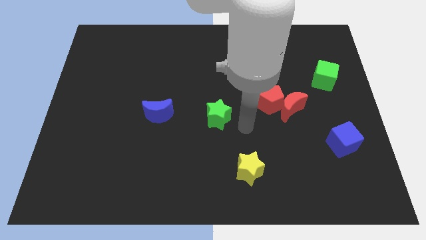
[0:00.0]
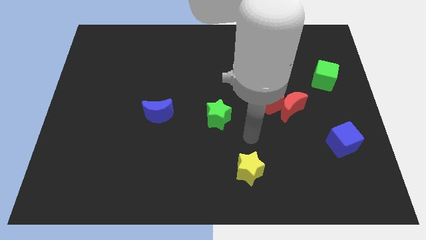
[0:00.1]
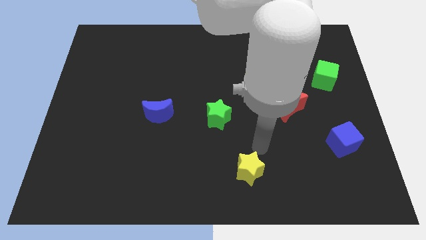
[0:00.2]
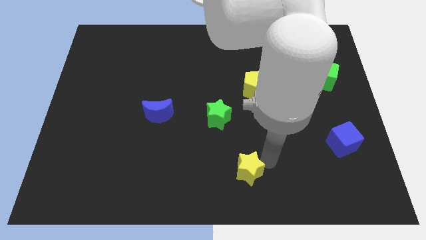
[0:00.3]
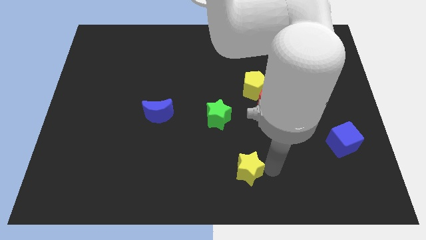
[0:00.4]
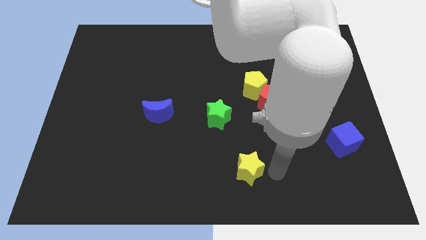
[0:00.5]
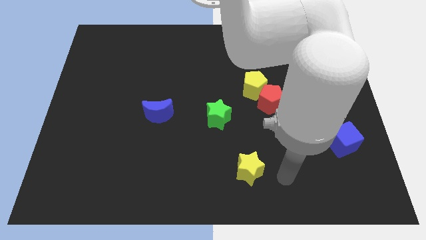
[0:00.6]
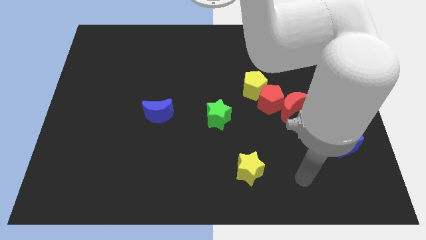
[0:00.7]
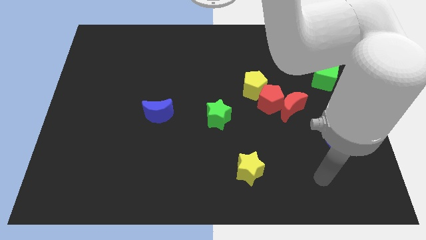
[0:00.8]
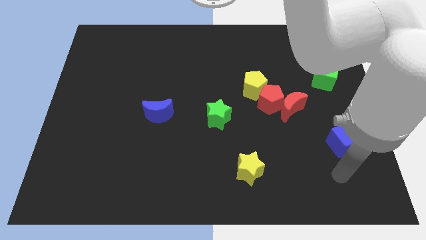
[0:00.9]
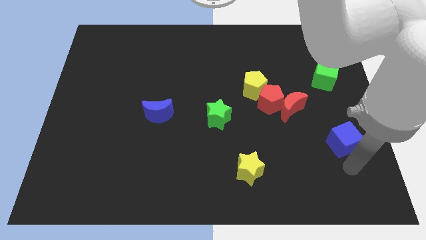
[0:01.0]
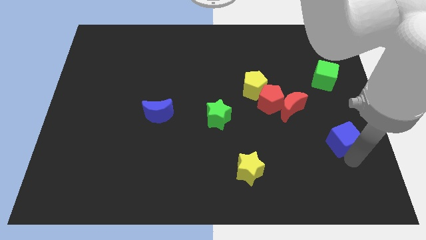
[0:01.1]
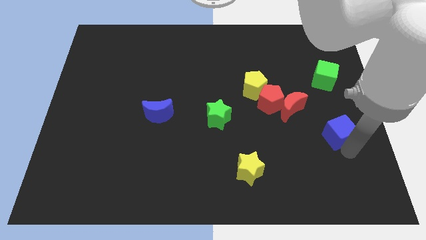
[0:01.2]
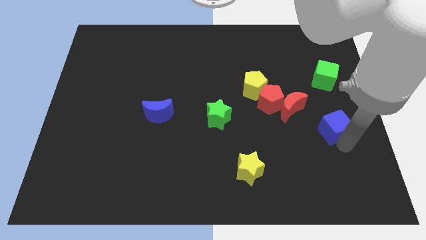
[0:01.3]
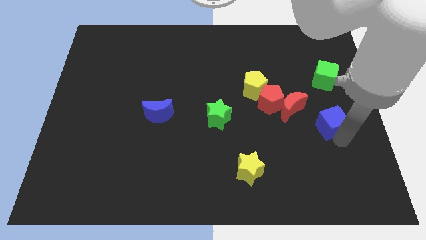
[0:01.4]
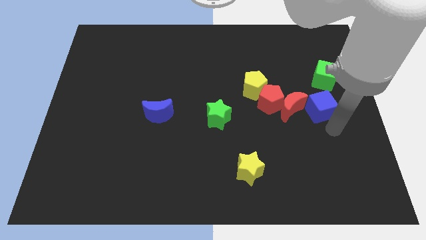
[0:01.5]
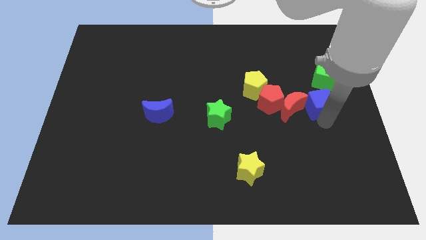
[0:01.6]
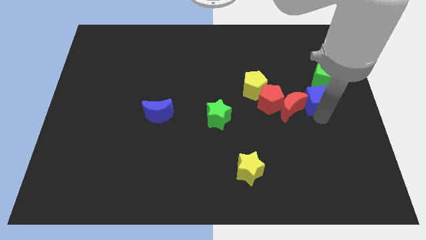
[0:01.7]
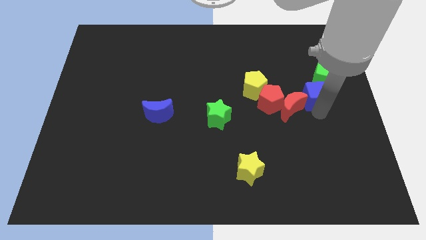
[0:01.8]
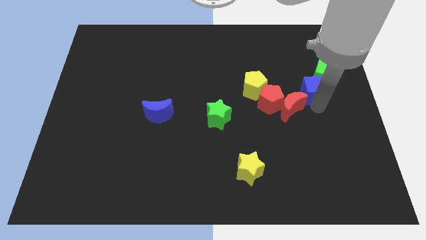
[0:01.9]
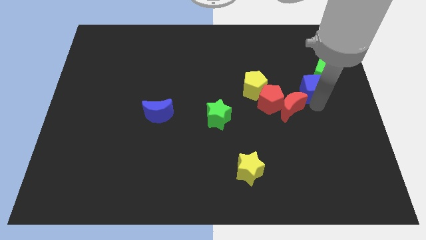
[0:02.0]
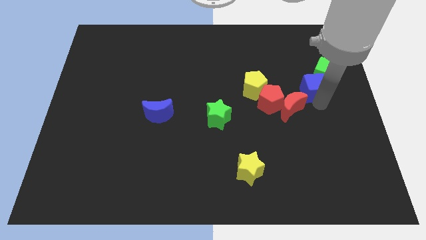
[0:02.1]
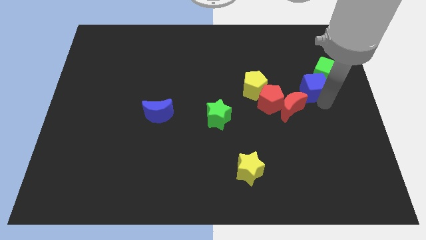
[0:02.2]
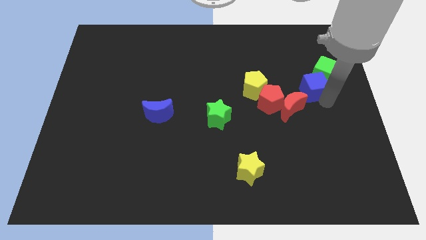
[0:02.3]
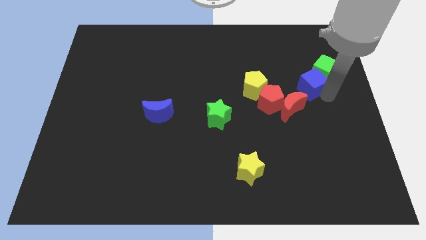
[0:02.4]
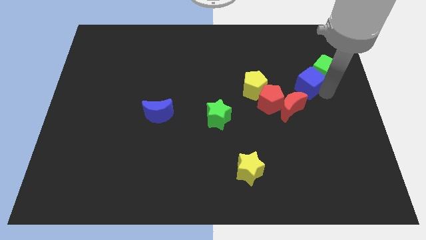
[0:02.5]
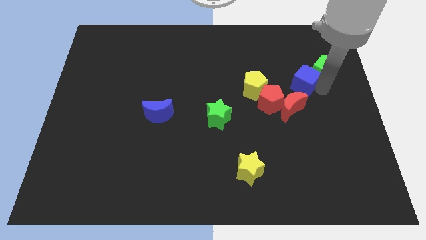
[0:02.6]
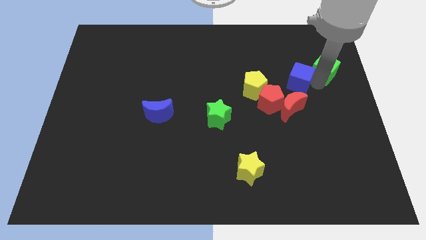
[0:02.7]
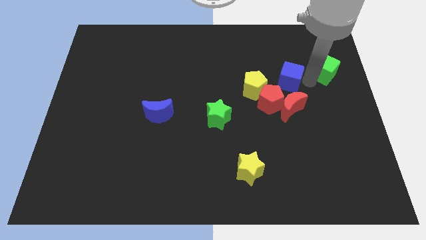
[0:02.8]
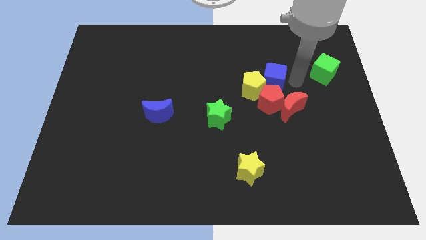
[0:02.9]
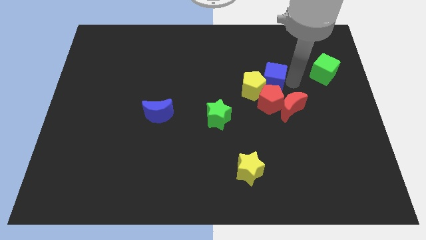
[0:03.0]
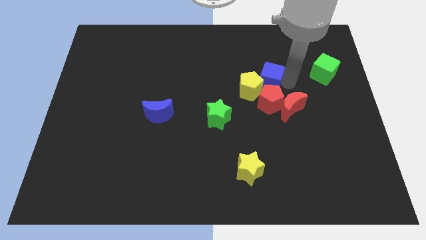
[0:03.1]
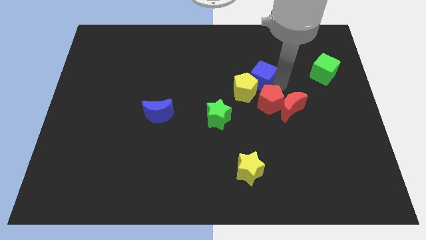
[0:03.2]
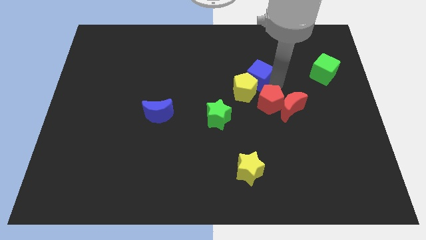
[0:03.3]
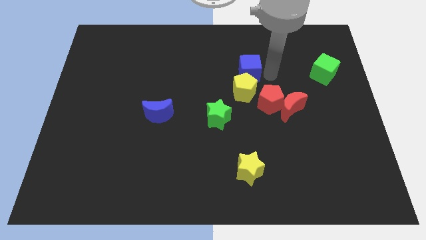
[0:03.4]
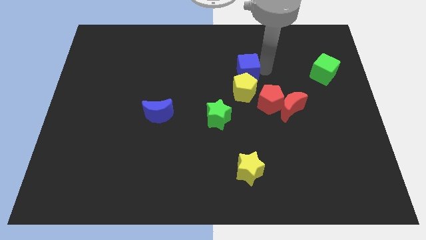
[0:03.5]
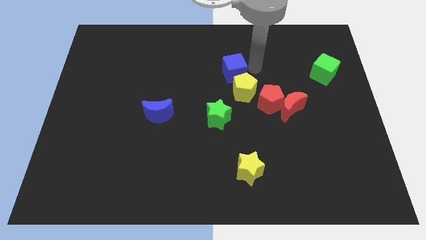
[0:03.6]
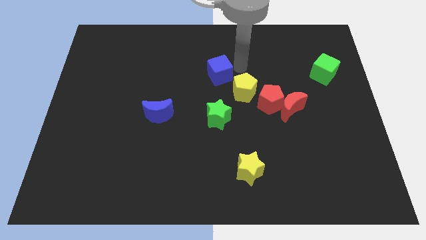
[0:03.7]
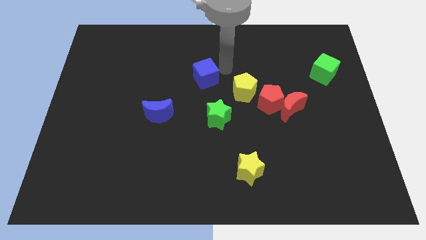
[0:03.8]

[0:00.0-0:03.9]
place the blue cube above the green star

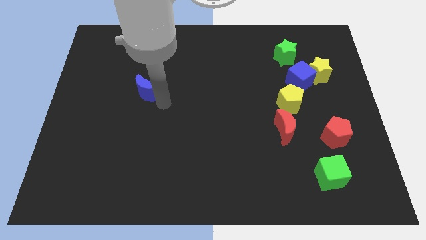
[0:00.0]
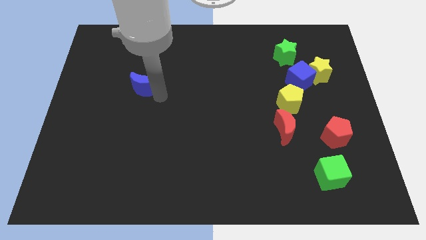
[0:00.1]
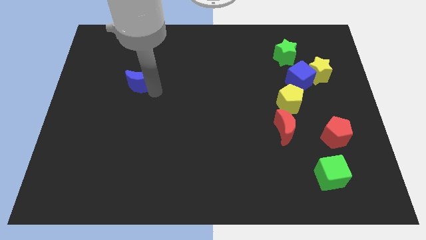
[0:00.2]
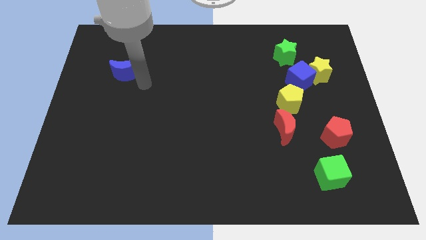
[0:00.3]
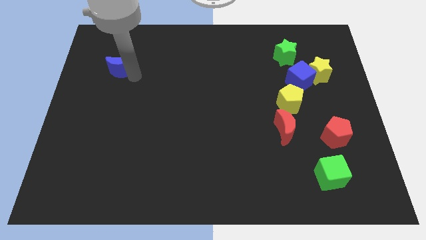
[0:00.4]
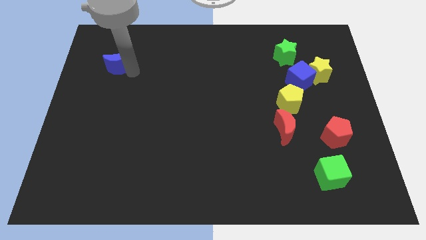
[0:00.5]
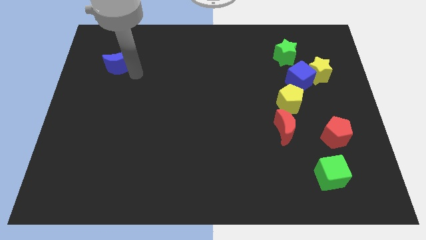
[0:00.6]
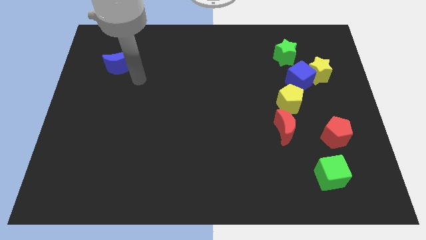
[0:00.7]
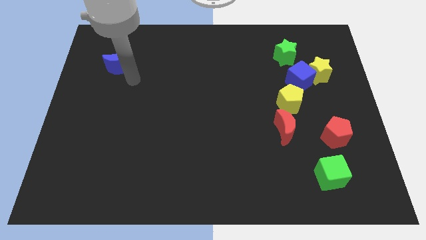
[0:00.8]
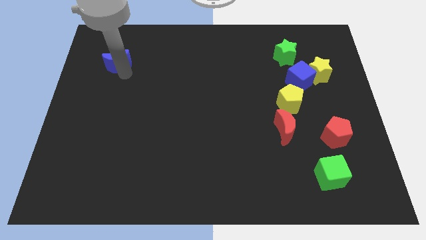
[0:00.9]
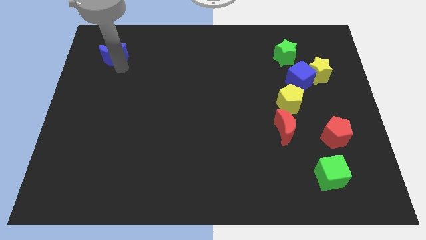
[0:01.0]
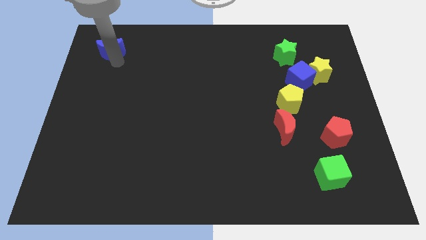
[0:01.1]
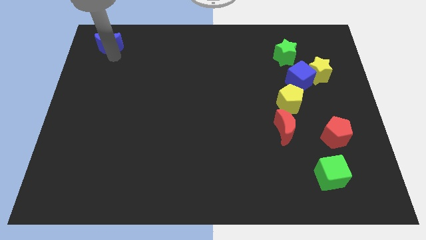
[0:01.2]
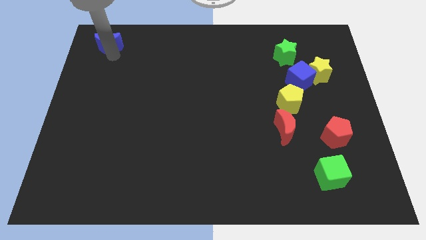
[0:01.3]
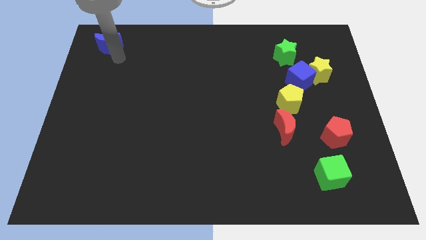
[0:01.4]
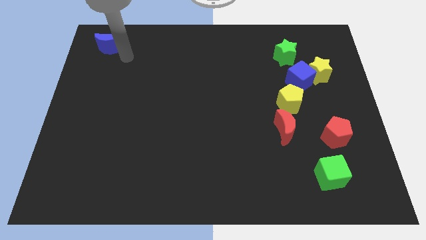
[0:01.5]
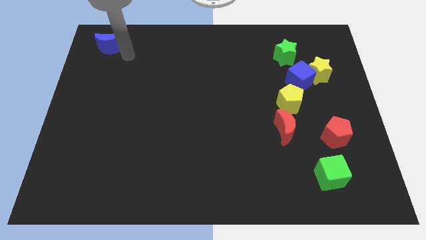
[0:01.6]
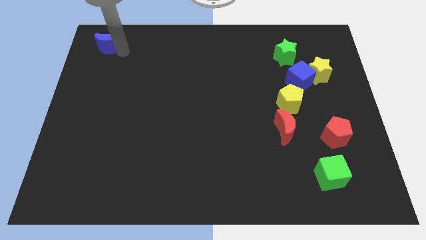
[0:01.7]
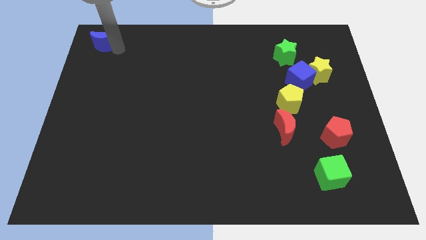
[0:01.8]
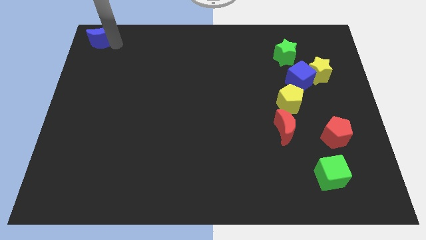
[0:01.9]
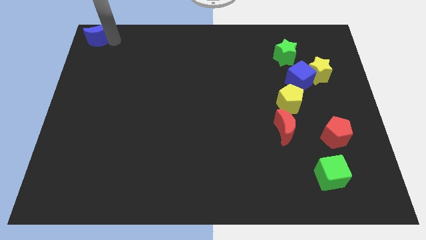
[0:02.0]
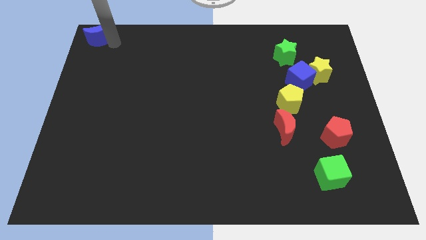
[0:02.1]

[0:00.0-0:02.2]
move the blue crescent to the top left of the board

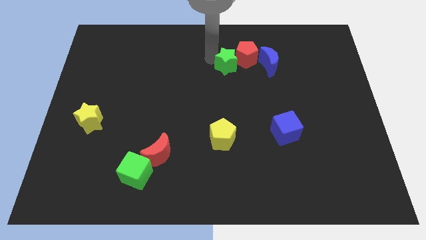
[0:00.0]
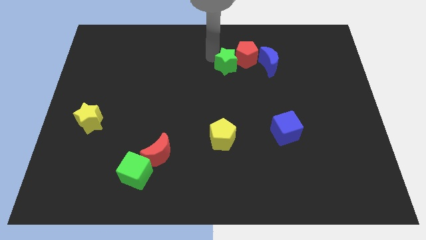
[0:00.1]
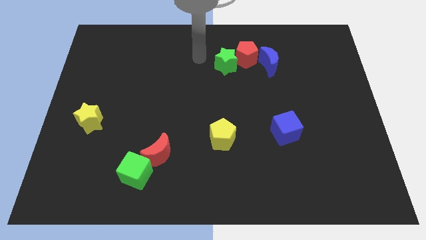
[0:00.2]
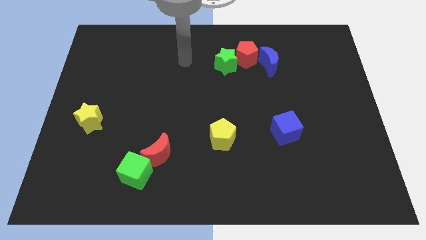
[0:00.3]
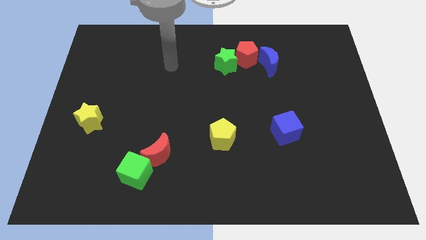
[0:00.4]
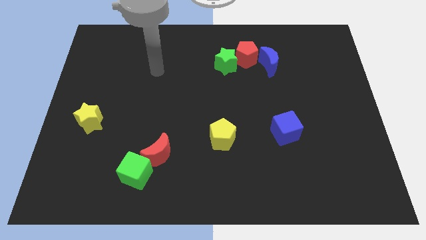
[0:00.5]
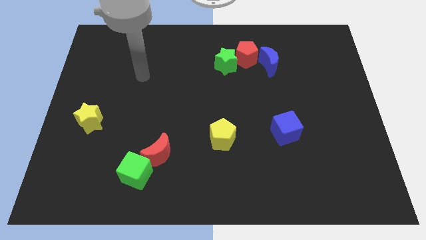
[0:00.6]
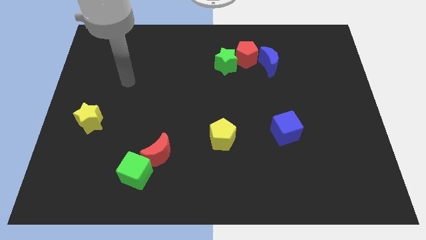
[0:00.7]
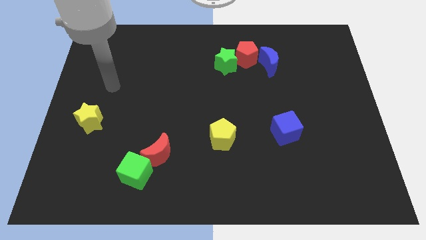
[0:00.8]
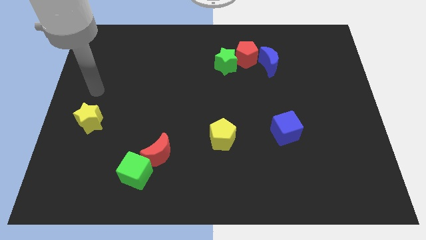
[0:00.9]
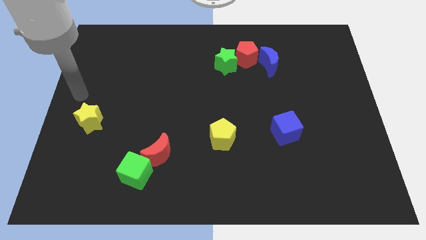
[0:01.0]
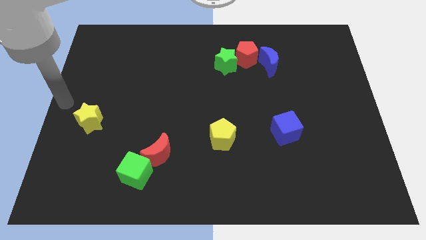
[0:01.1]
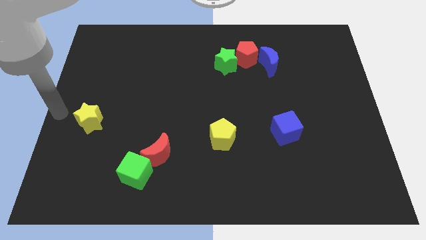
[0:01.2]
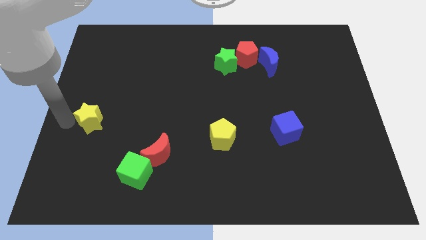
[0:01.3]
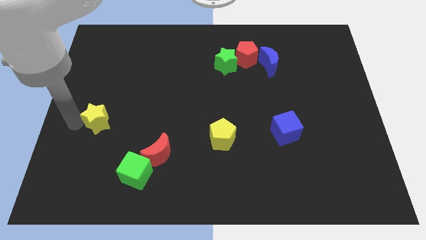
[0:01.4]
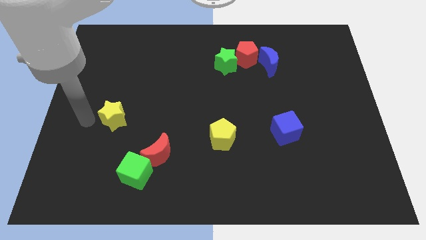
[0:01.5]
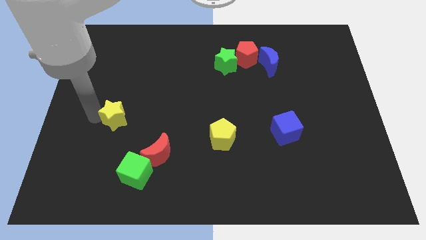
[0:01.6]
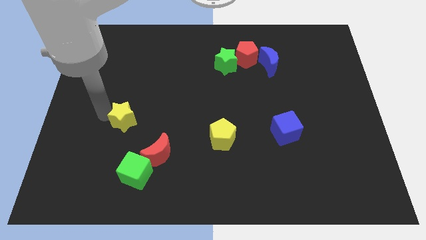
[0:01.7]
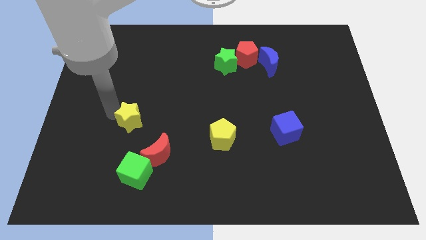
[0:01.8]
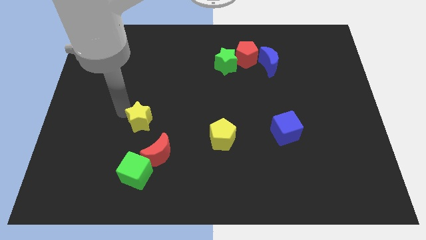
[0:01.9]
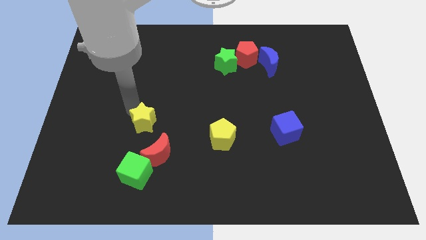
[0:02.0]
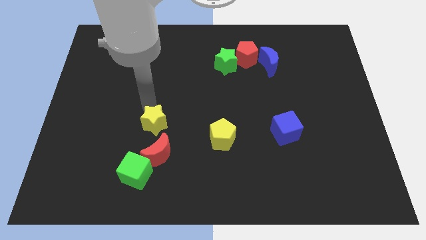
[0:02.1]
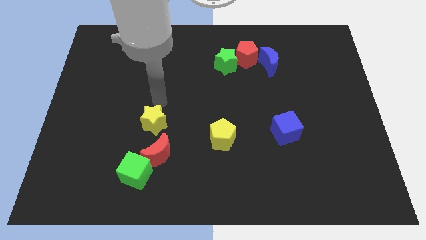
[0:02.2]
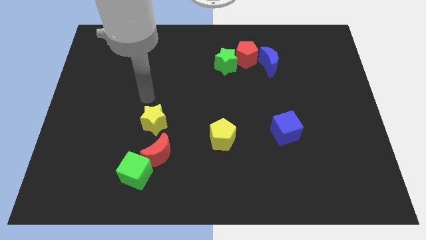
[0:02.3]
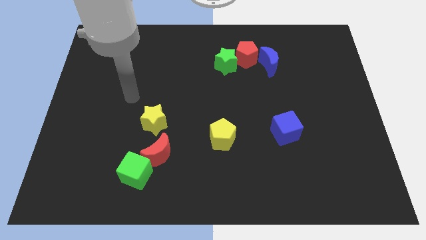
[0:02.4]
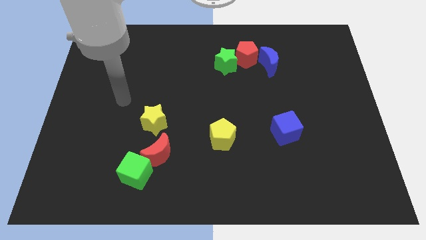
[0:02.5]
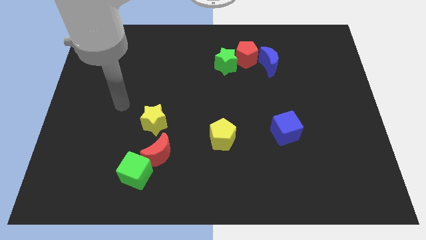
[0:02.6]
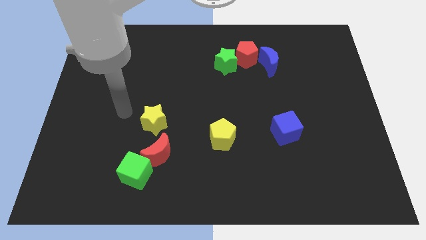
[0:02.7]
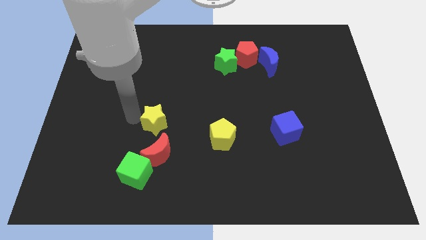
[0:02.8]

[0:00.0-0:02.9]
move the yellow star above the red crescent

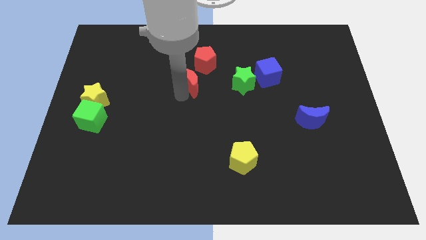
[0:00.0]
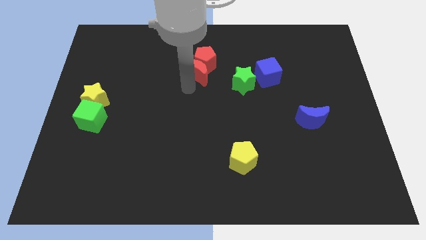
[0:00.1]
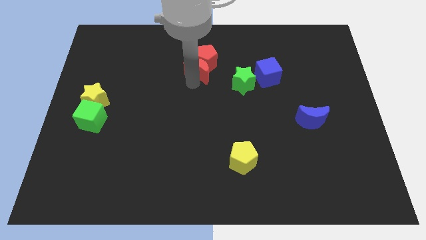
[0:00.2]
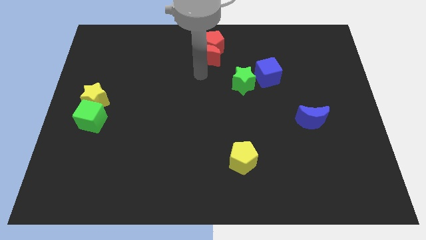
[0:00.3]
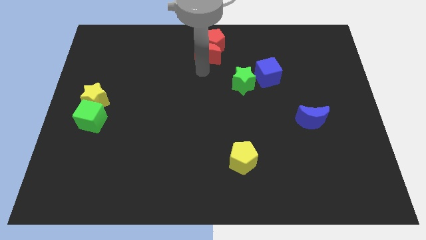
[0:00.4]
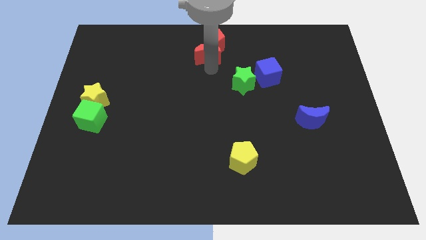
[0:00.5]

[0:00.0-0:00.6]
push the red crescent along with the red pentagon to the top center of the board
